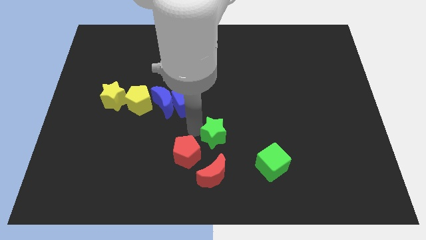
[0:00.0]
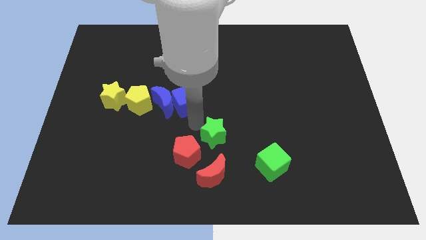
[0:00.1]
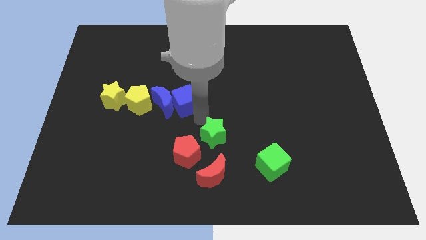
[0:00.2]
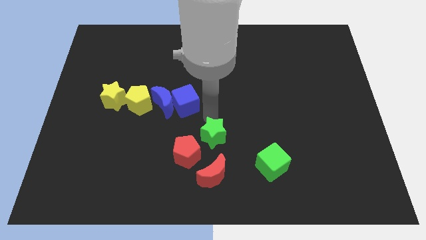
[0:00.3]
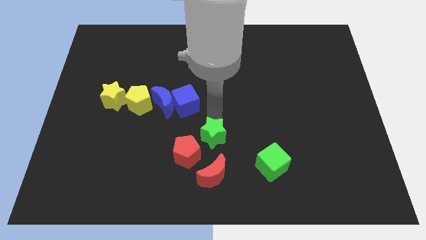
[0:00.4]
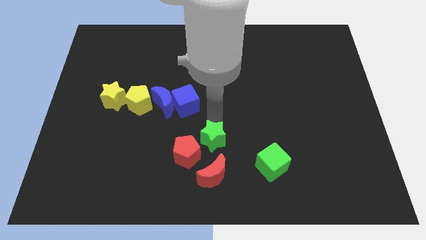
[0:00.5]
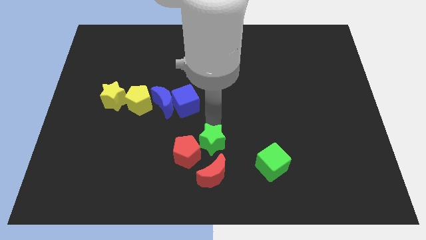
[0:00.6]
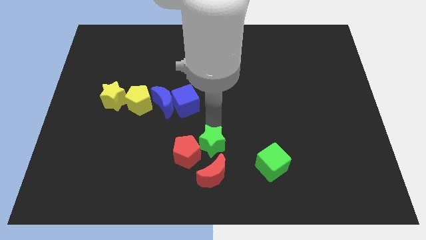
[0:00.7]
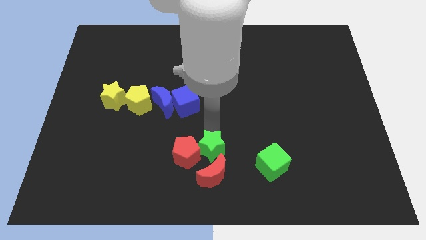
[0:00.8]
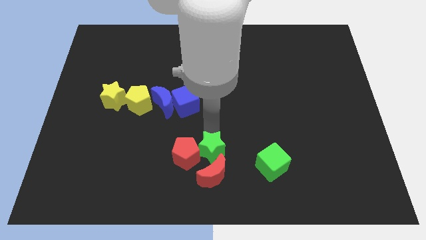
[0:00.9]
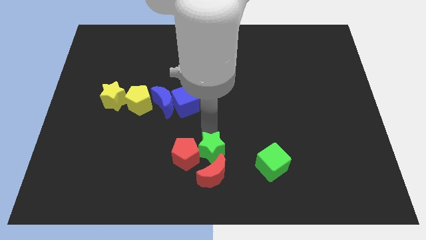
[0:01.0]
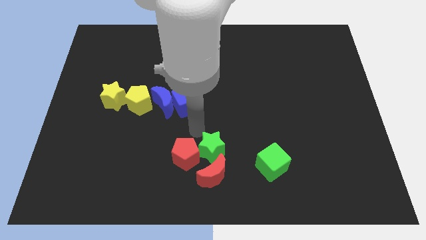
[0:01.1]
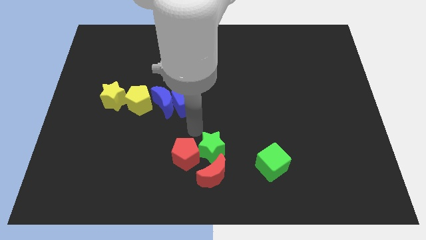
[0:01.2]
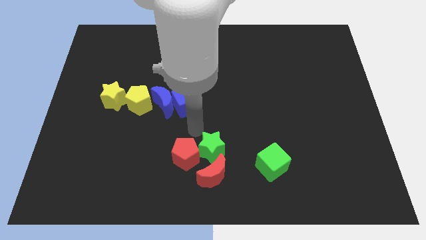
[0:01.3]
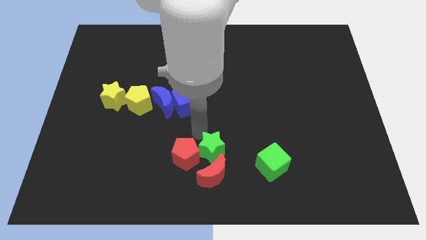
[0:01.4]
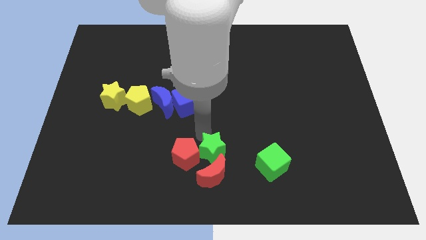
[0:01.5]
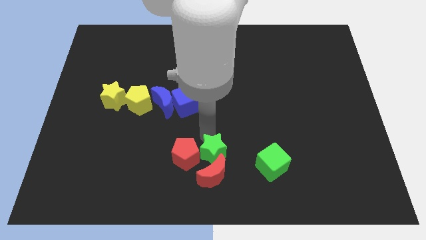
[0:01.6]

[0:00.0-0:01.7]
place the green star above the red crescent

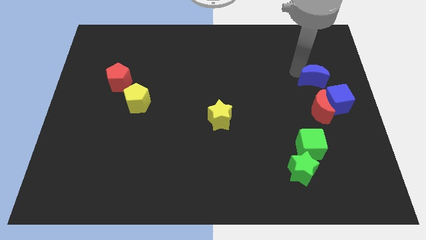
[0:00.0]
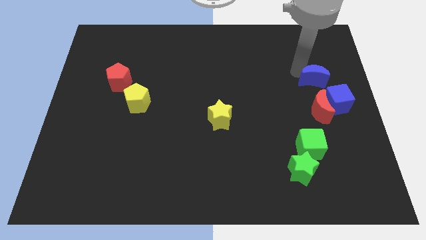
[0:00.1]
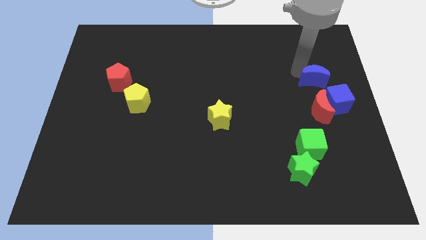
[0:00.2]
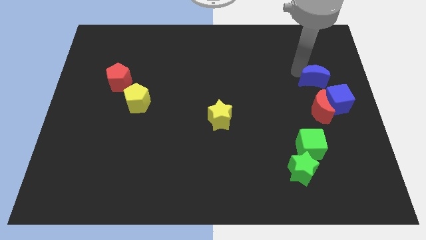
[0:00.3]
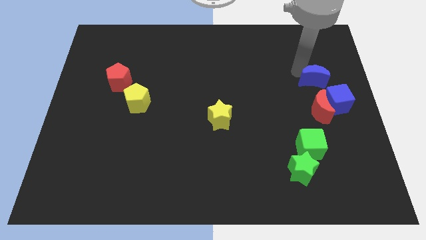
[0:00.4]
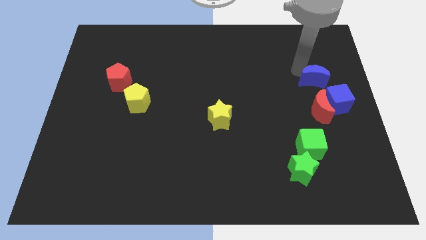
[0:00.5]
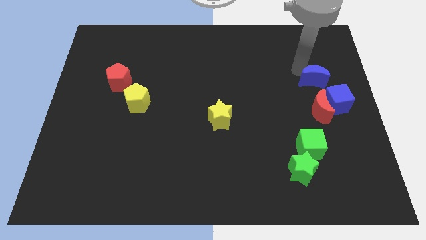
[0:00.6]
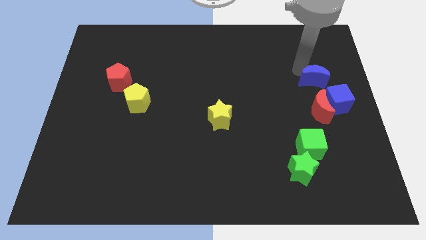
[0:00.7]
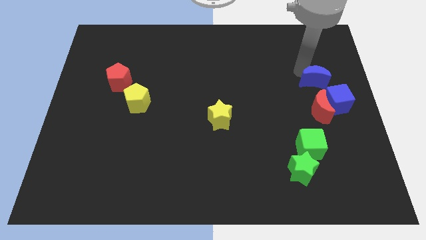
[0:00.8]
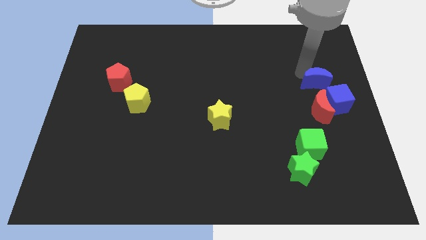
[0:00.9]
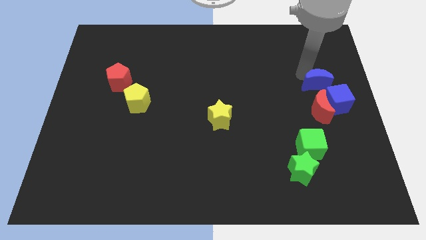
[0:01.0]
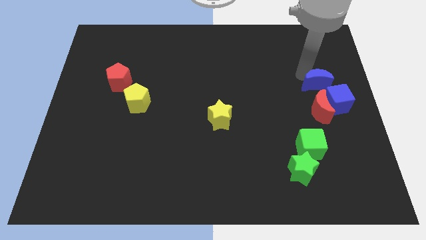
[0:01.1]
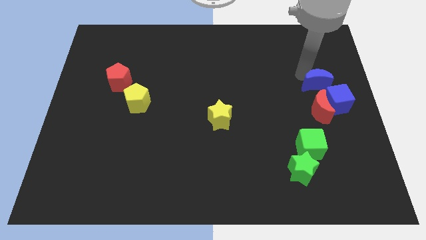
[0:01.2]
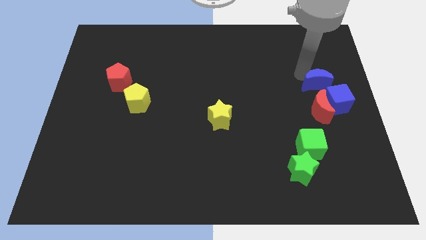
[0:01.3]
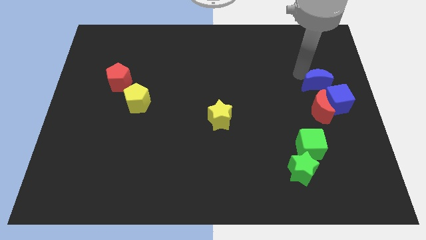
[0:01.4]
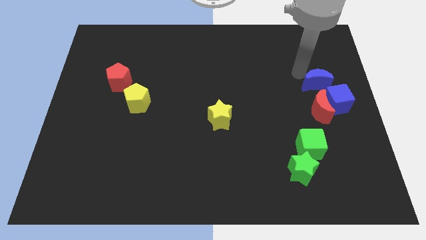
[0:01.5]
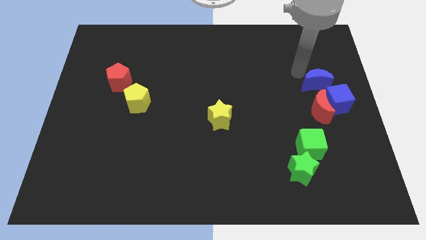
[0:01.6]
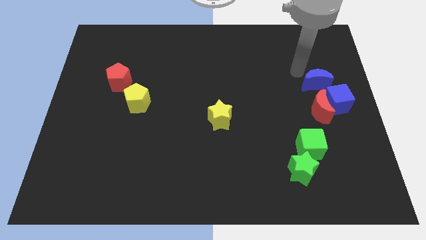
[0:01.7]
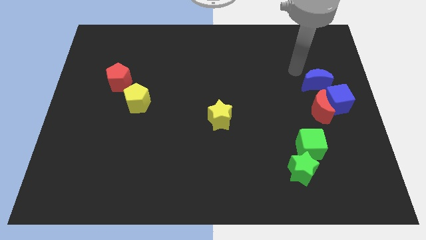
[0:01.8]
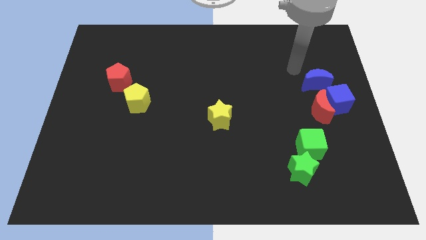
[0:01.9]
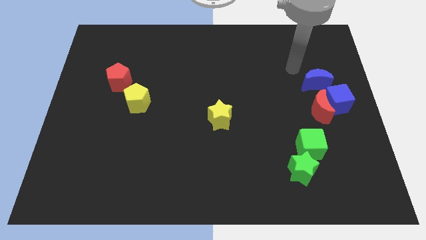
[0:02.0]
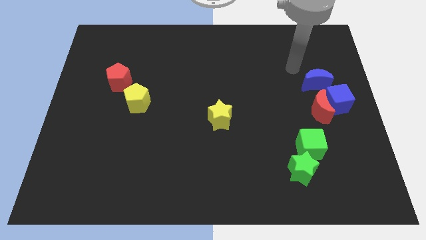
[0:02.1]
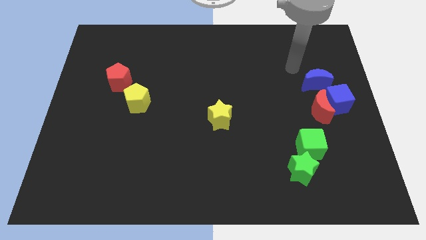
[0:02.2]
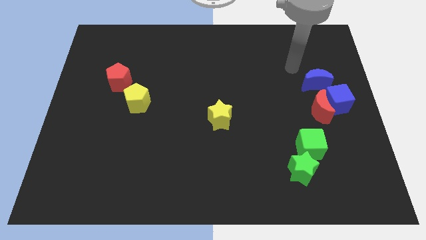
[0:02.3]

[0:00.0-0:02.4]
move the blue crescent towards the blue cube

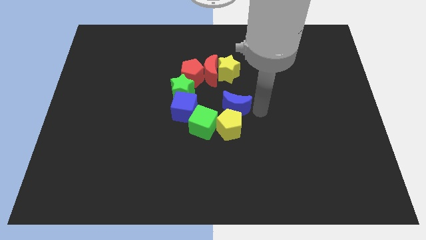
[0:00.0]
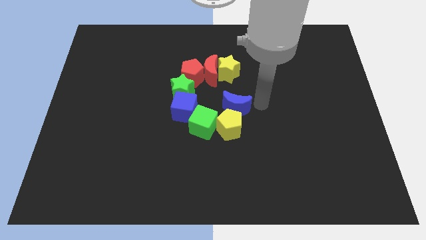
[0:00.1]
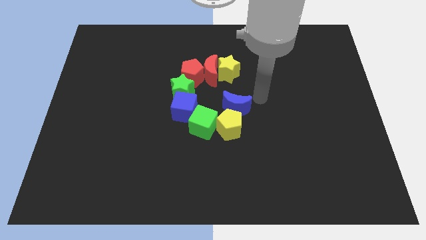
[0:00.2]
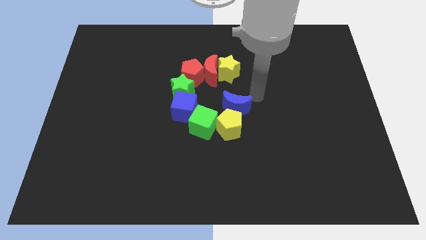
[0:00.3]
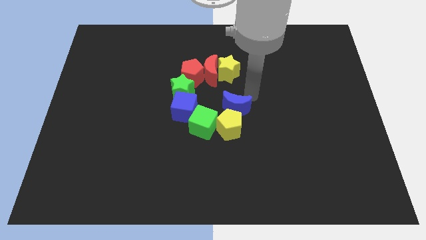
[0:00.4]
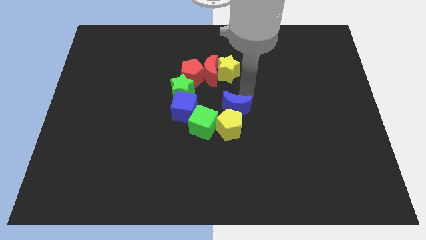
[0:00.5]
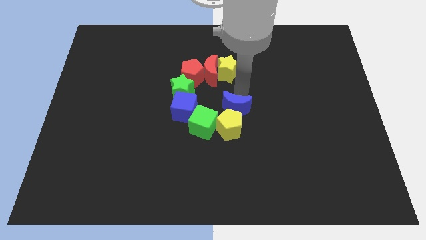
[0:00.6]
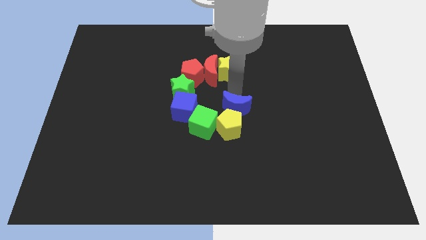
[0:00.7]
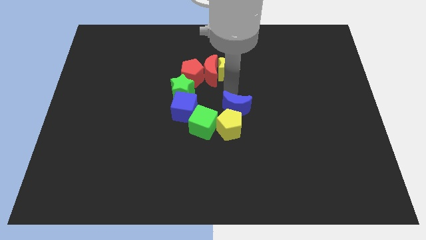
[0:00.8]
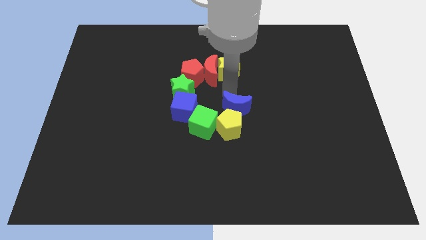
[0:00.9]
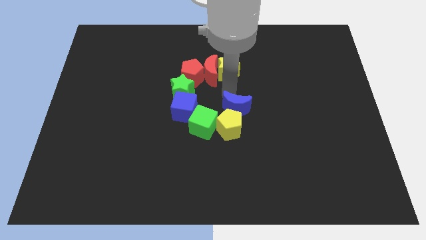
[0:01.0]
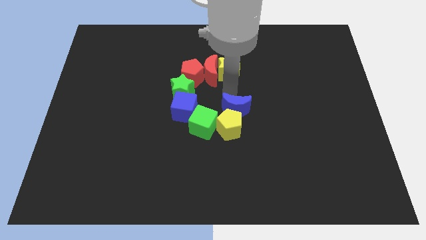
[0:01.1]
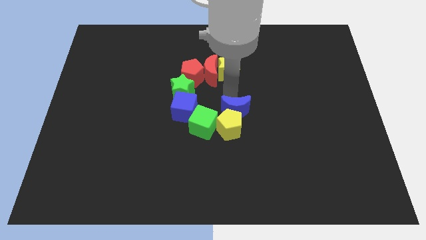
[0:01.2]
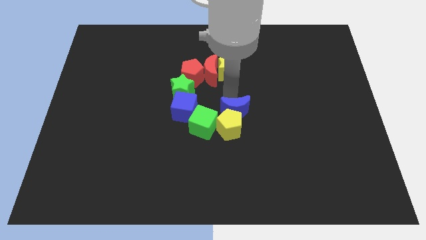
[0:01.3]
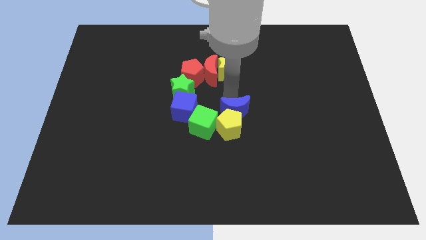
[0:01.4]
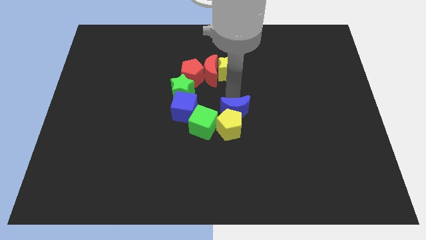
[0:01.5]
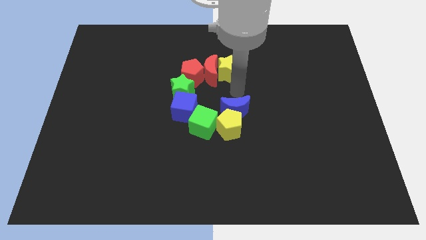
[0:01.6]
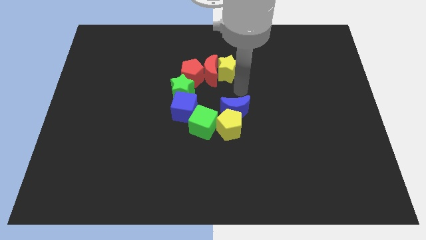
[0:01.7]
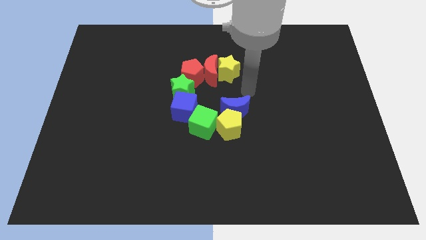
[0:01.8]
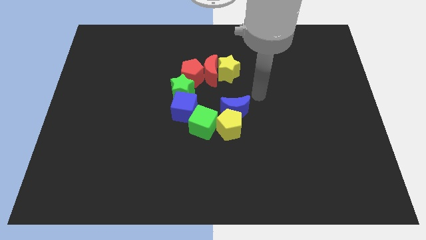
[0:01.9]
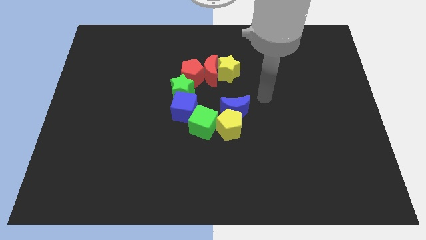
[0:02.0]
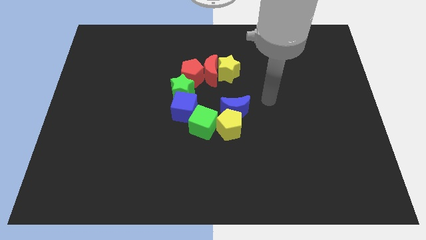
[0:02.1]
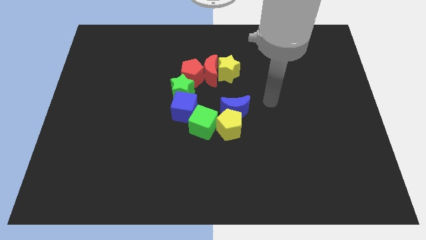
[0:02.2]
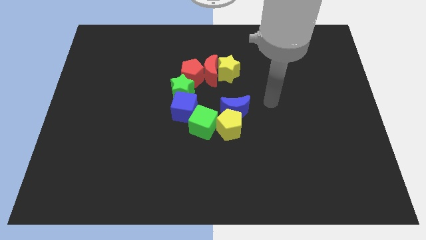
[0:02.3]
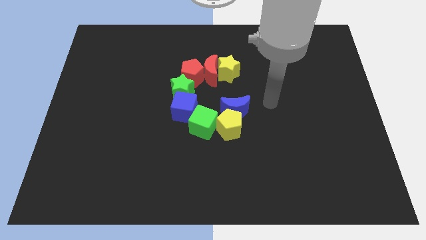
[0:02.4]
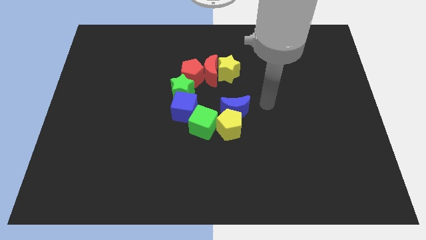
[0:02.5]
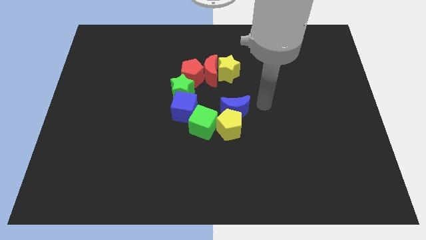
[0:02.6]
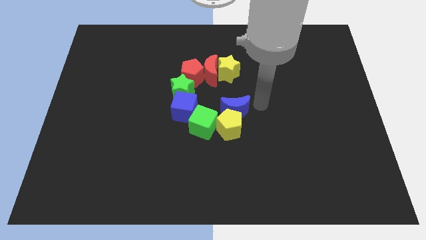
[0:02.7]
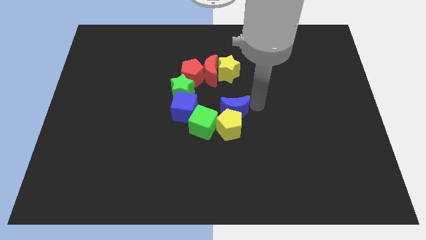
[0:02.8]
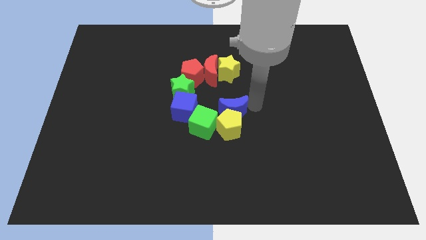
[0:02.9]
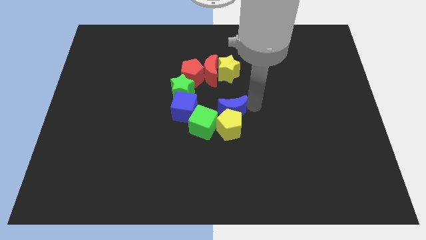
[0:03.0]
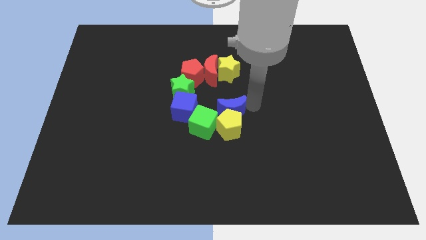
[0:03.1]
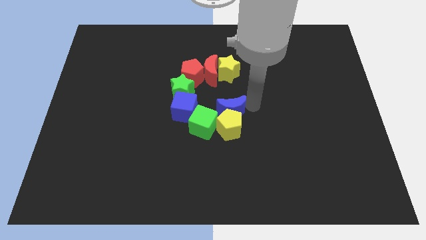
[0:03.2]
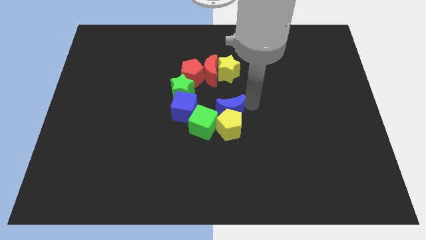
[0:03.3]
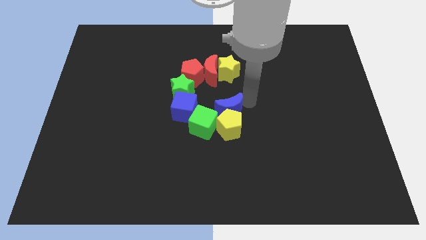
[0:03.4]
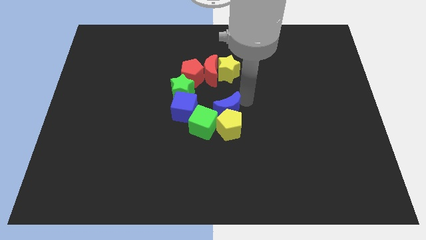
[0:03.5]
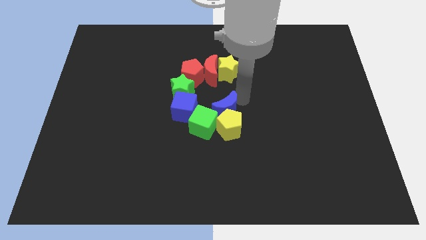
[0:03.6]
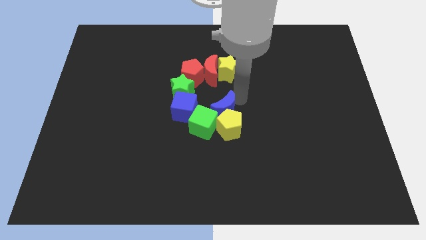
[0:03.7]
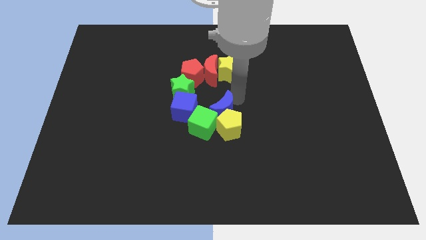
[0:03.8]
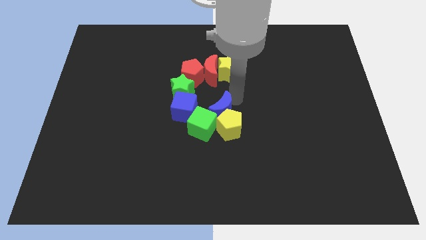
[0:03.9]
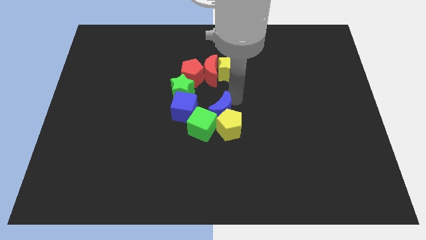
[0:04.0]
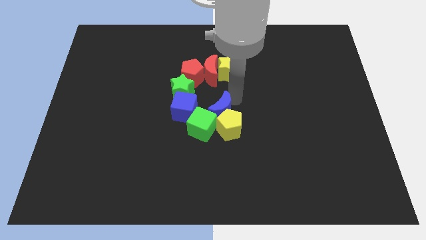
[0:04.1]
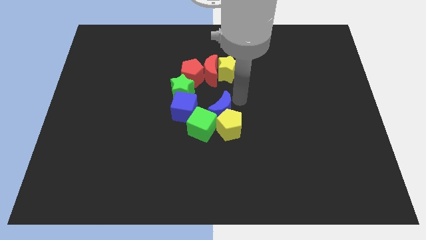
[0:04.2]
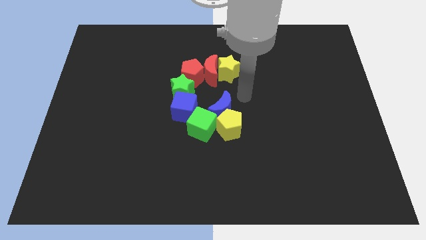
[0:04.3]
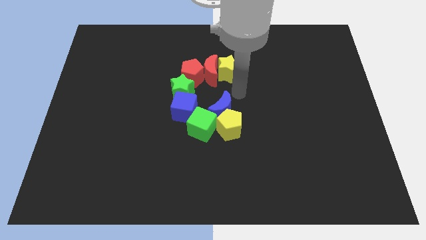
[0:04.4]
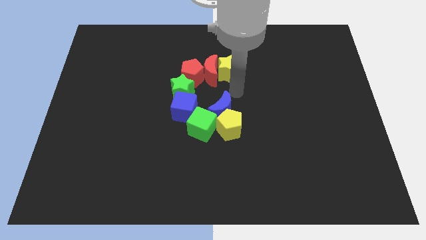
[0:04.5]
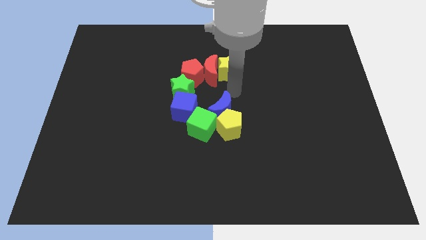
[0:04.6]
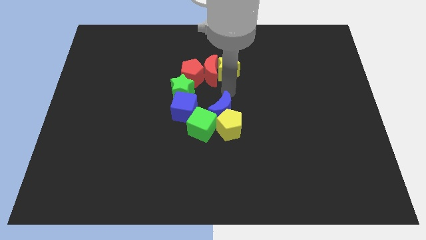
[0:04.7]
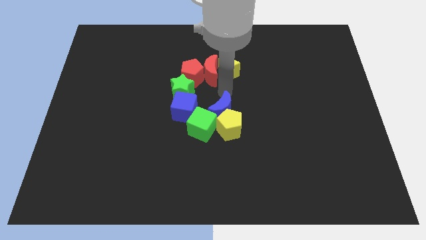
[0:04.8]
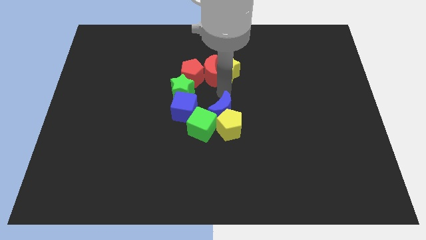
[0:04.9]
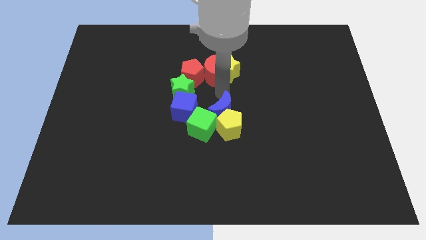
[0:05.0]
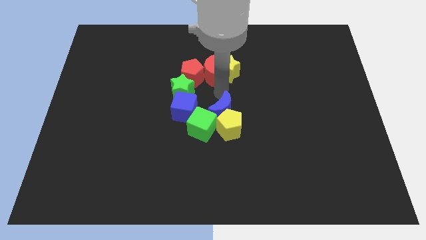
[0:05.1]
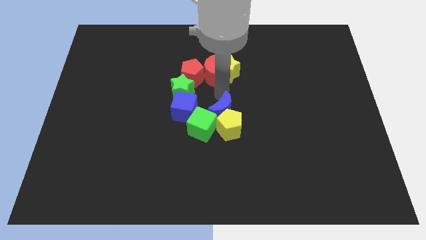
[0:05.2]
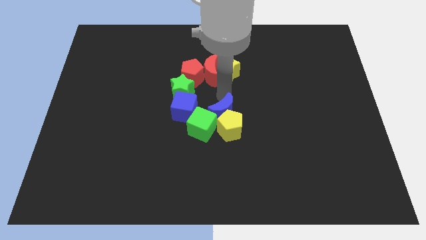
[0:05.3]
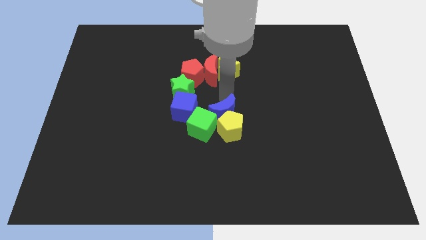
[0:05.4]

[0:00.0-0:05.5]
place the blue crescent above the green cube
